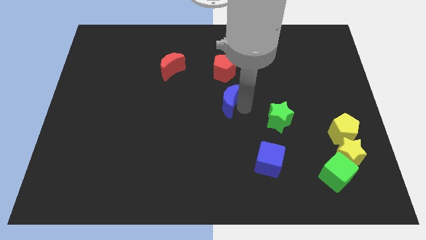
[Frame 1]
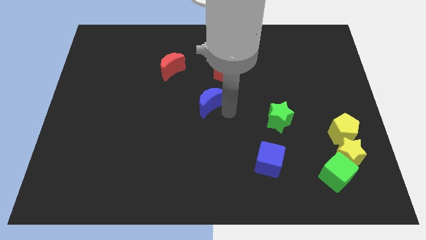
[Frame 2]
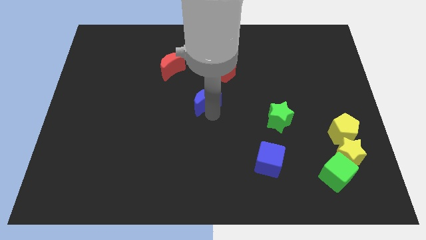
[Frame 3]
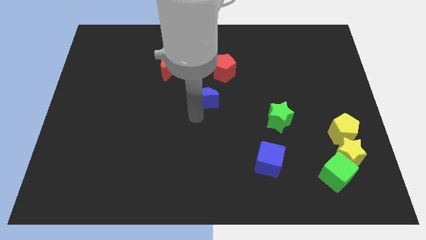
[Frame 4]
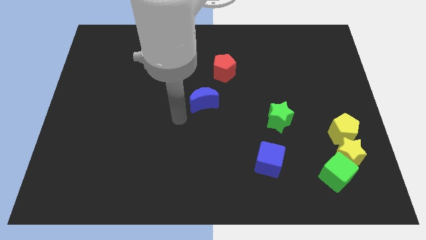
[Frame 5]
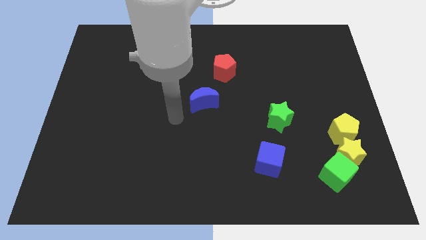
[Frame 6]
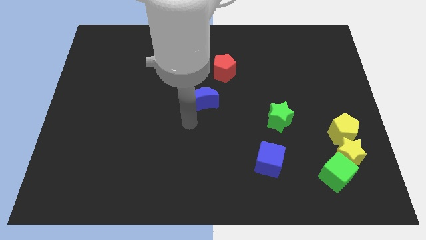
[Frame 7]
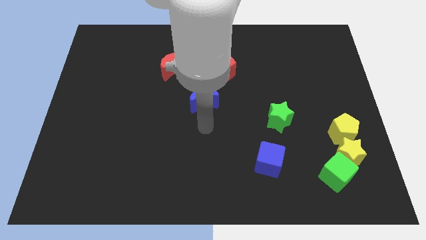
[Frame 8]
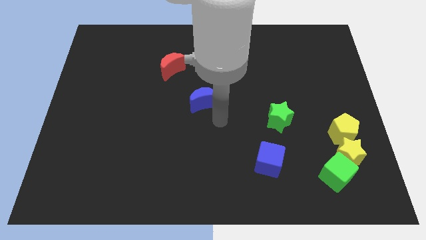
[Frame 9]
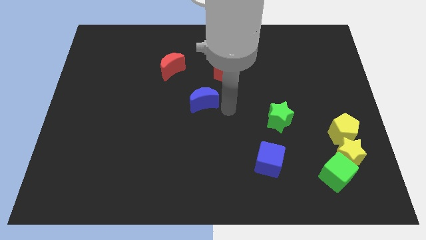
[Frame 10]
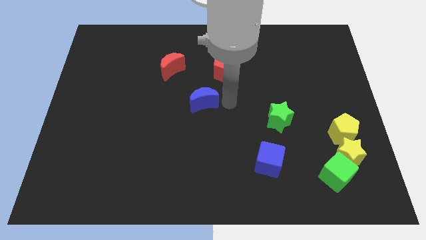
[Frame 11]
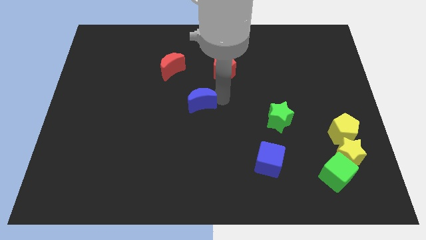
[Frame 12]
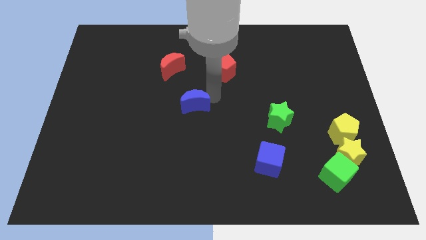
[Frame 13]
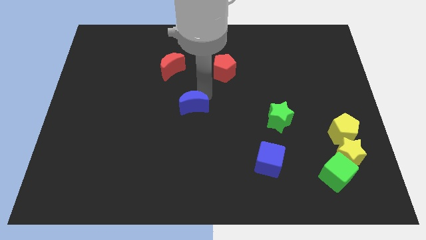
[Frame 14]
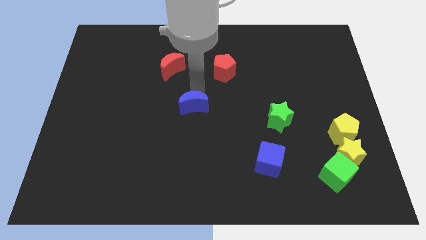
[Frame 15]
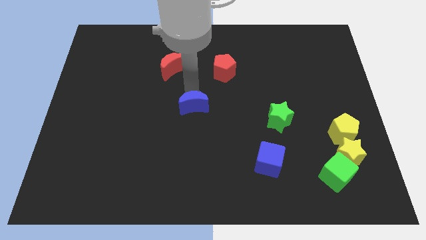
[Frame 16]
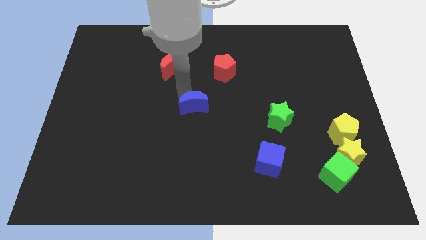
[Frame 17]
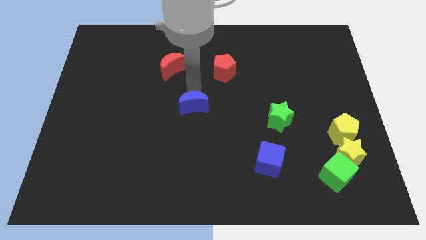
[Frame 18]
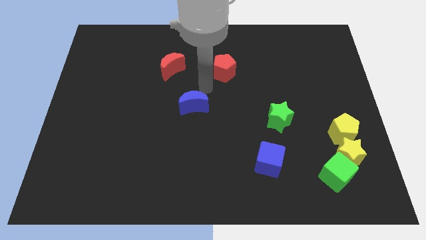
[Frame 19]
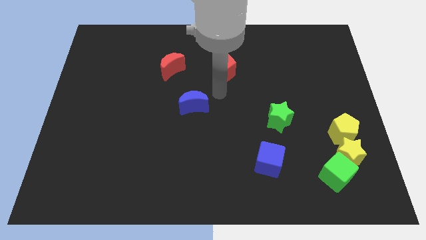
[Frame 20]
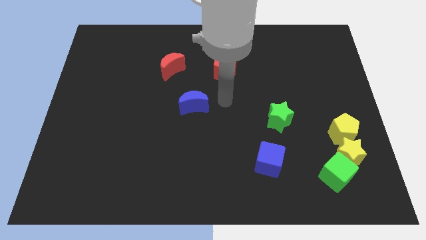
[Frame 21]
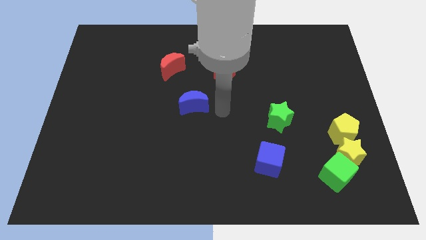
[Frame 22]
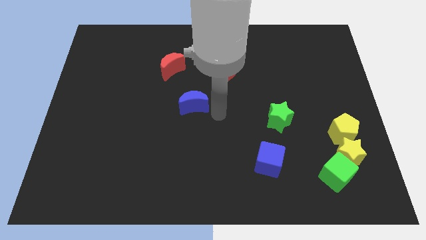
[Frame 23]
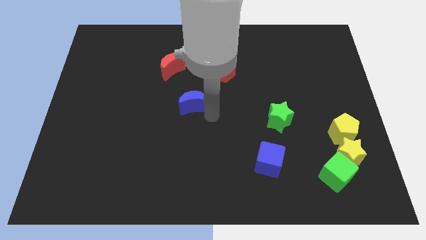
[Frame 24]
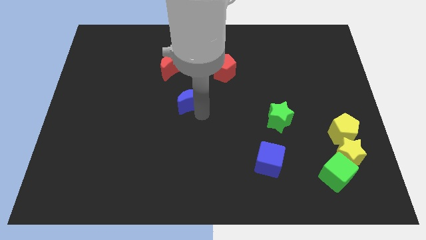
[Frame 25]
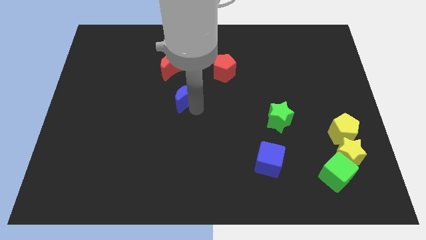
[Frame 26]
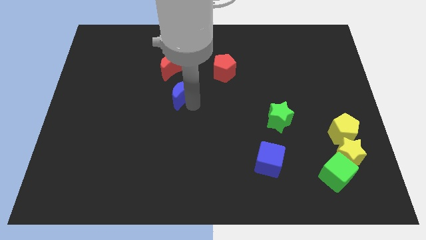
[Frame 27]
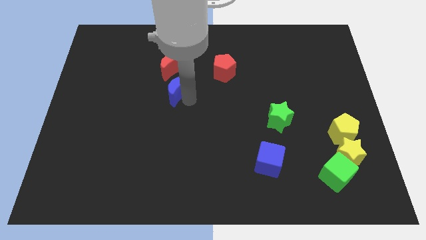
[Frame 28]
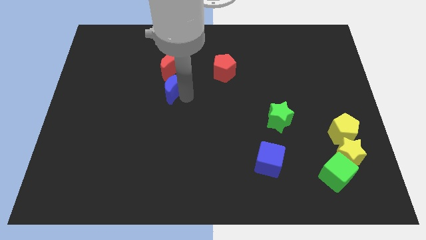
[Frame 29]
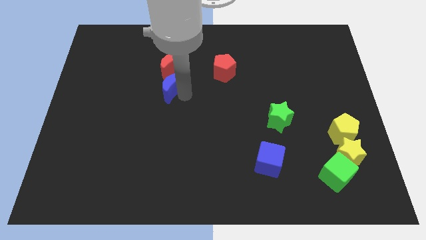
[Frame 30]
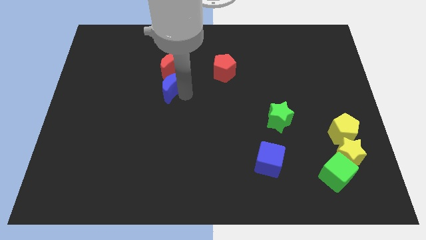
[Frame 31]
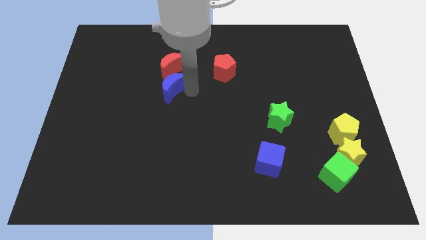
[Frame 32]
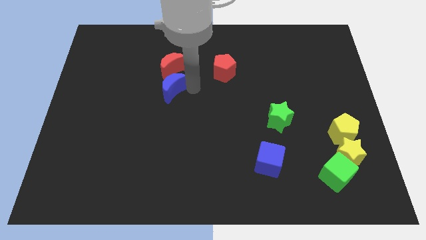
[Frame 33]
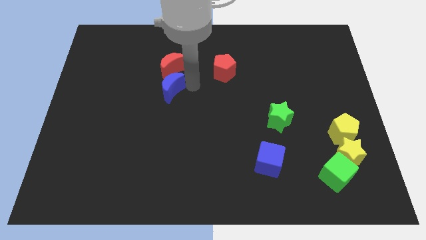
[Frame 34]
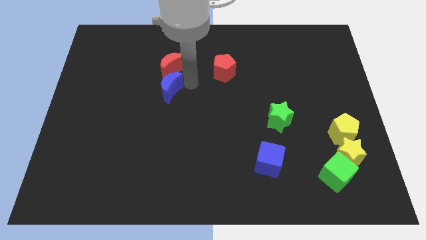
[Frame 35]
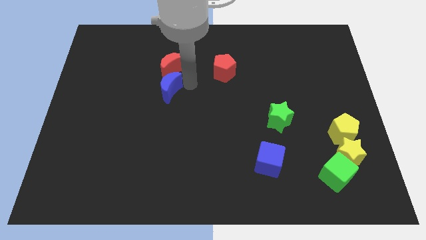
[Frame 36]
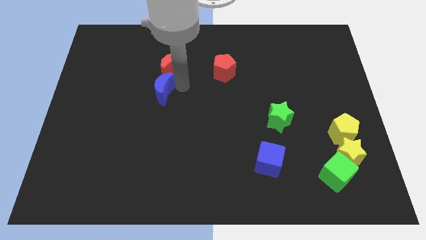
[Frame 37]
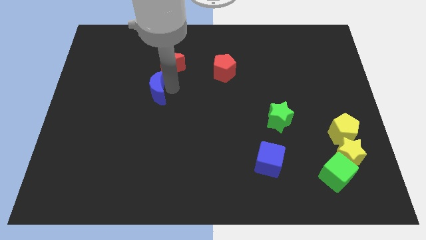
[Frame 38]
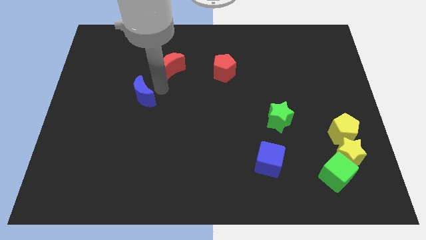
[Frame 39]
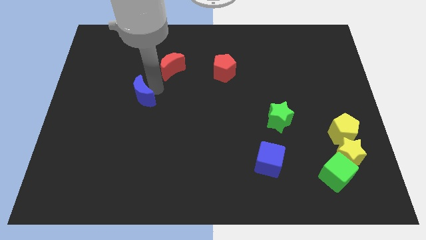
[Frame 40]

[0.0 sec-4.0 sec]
push the blue crescent to the bottom left to red crescent

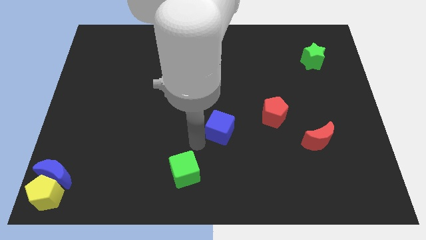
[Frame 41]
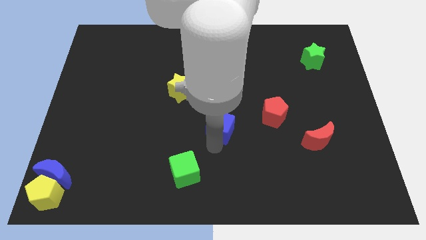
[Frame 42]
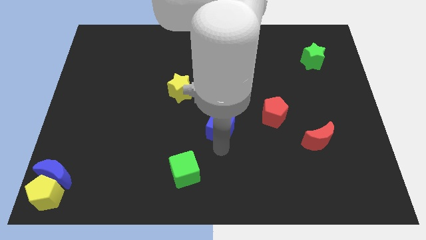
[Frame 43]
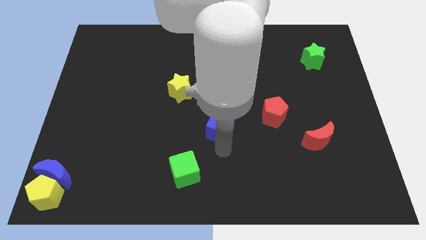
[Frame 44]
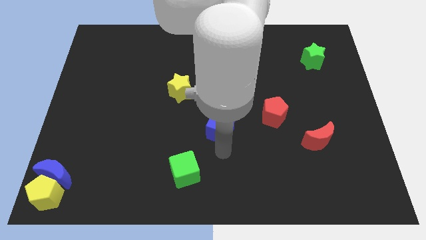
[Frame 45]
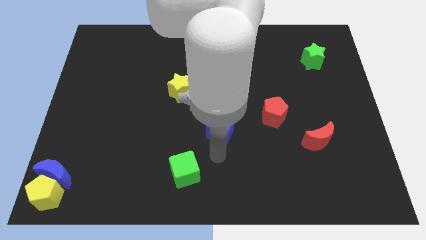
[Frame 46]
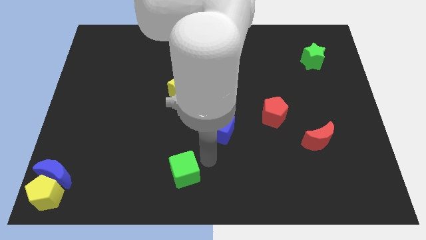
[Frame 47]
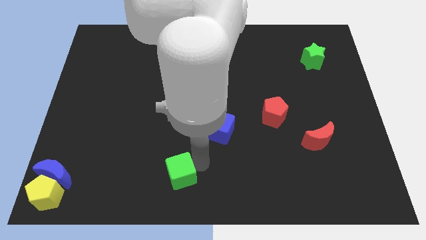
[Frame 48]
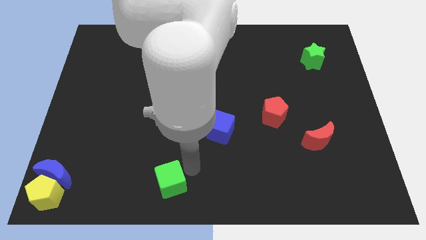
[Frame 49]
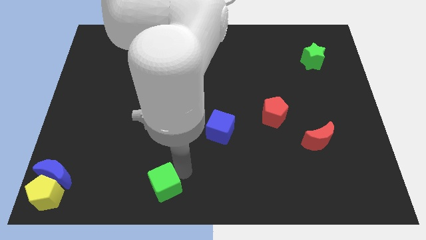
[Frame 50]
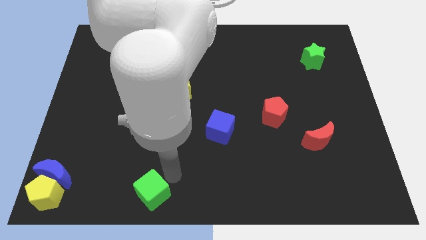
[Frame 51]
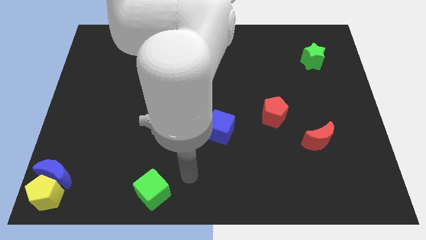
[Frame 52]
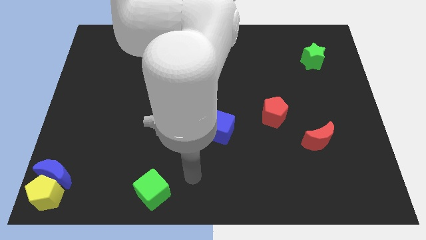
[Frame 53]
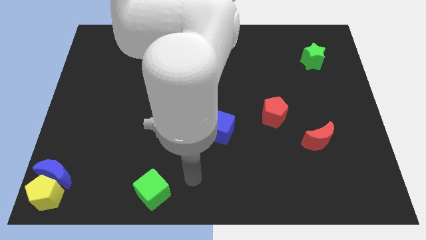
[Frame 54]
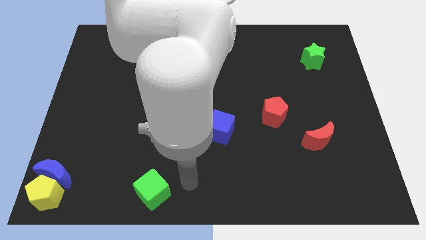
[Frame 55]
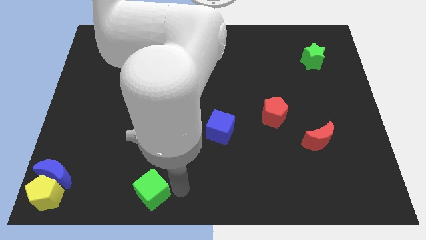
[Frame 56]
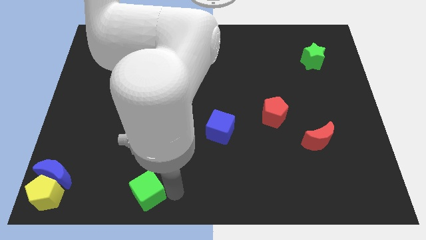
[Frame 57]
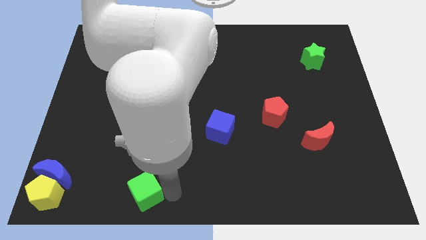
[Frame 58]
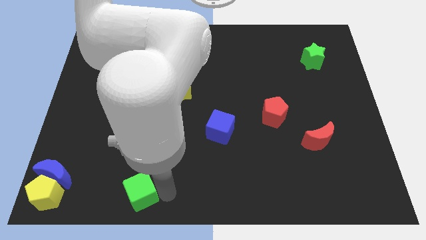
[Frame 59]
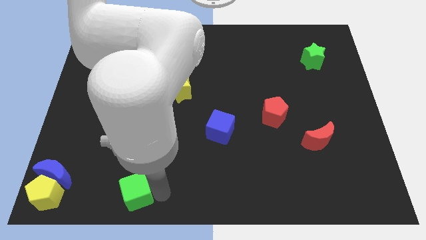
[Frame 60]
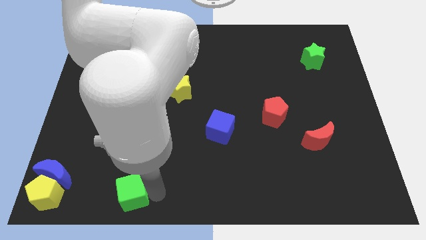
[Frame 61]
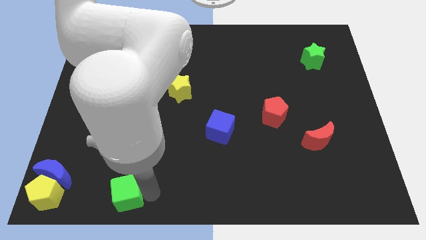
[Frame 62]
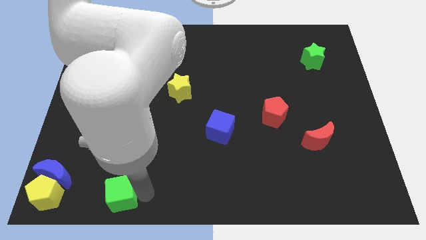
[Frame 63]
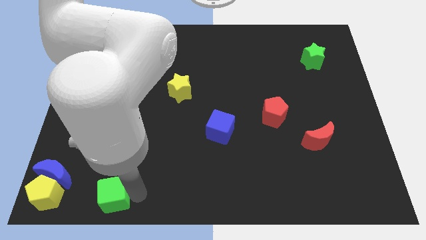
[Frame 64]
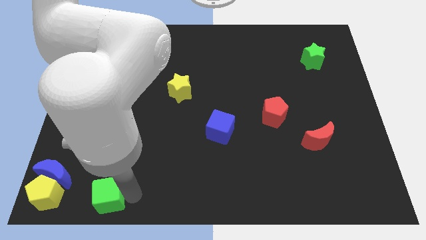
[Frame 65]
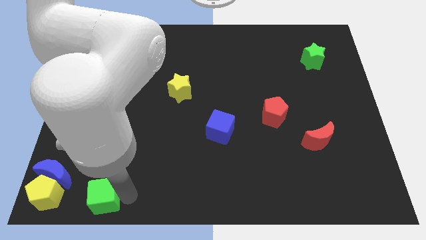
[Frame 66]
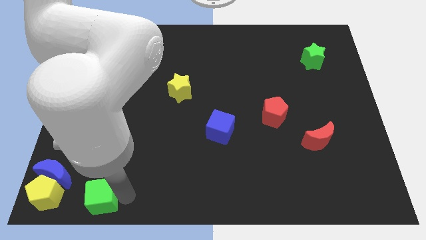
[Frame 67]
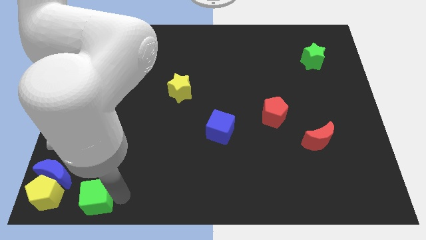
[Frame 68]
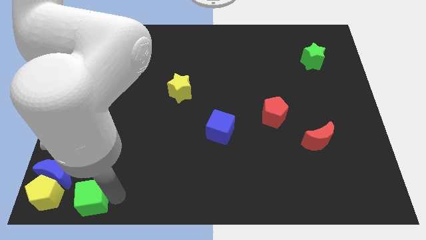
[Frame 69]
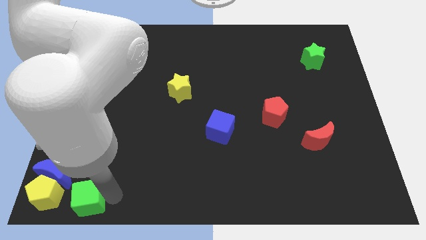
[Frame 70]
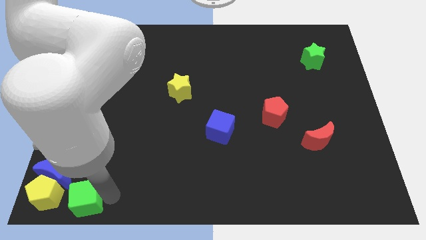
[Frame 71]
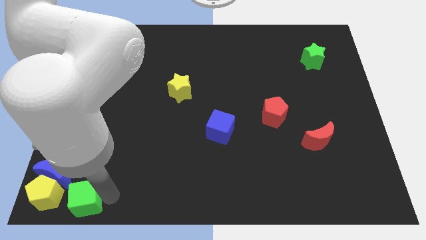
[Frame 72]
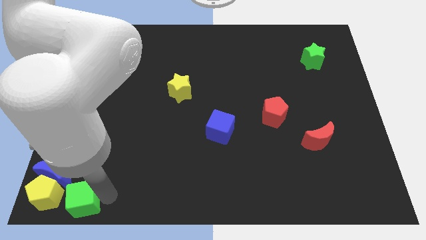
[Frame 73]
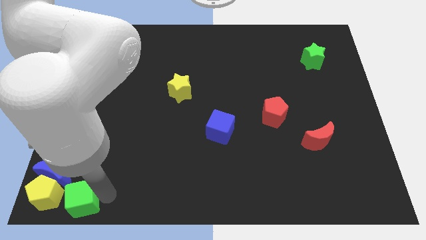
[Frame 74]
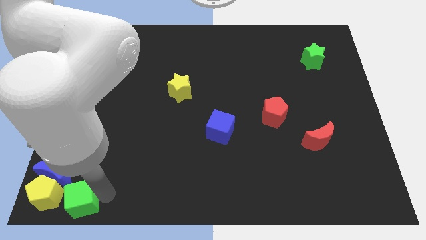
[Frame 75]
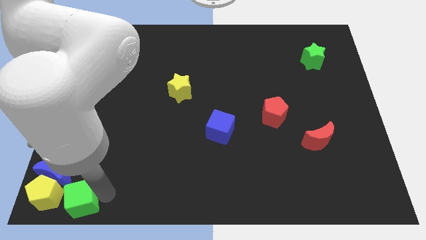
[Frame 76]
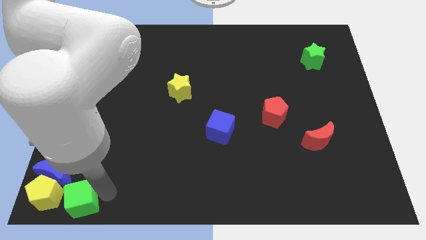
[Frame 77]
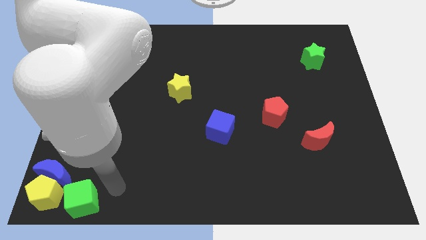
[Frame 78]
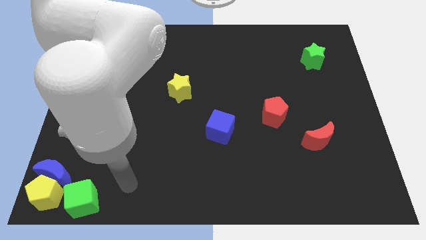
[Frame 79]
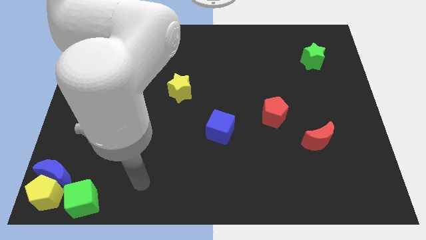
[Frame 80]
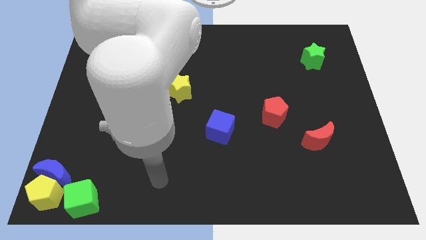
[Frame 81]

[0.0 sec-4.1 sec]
place green cube to the right of yellow pentagon

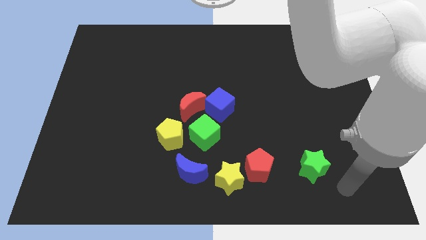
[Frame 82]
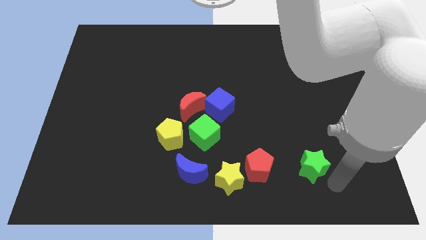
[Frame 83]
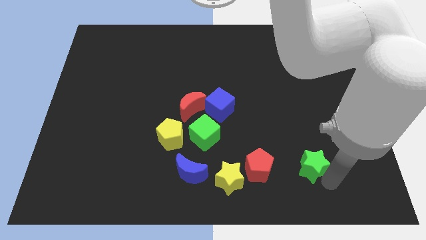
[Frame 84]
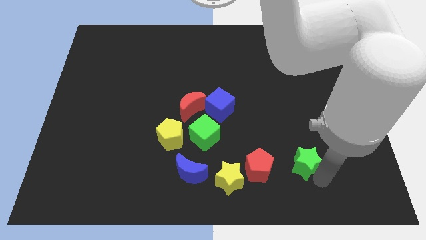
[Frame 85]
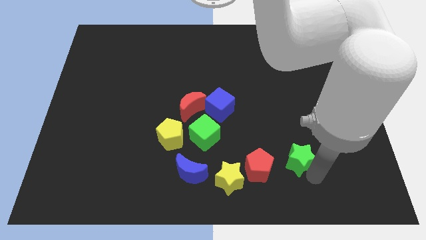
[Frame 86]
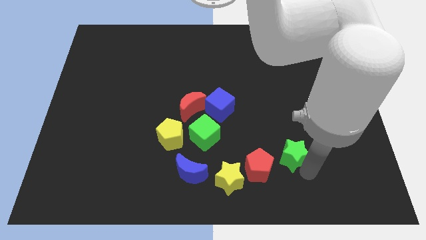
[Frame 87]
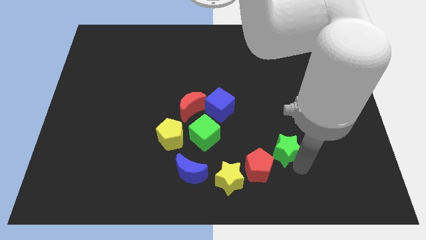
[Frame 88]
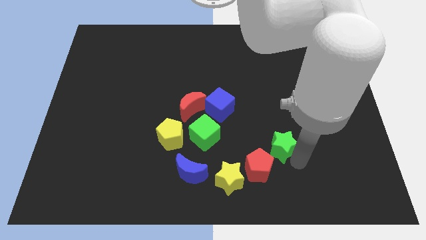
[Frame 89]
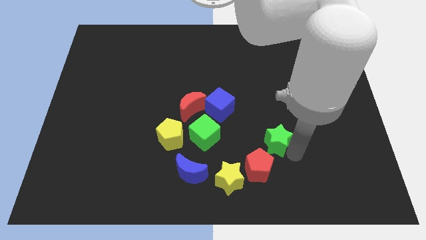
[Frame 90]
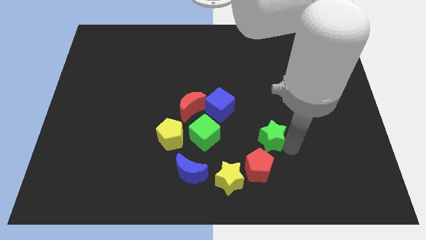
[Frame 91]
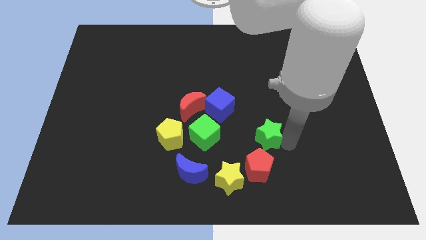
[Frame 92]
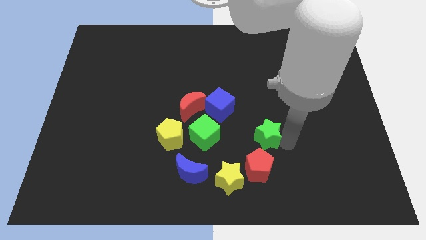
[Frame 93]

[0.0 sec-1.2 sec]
push the green star towards a group of elements
